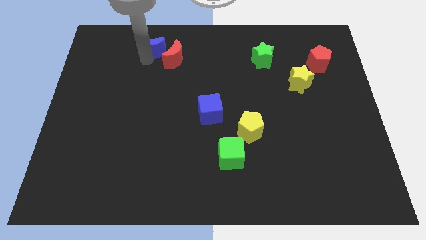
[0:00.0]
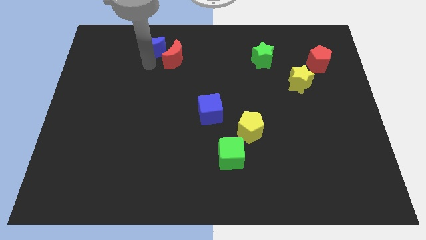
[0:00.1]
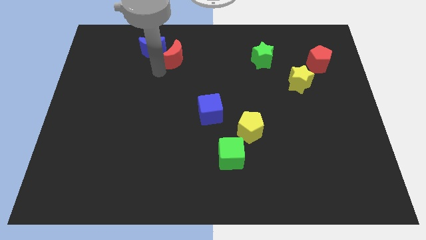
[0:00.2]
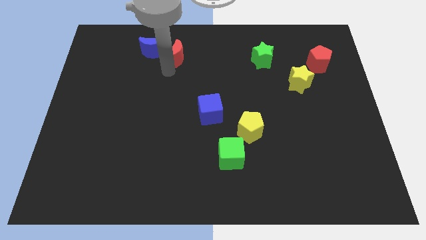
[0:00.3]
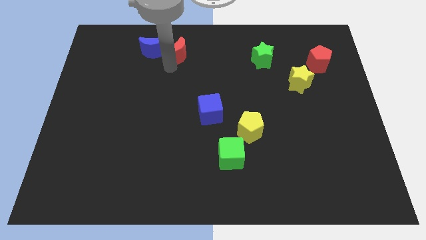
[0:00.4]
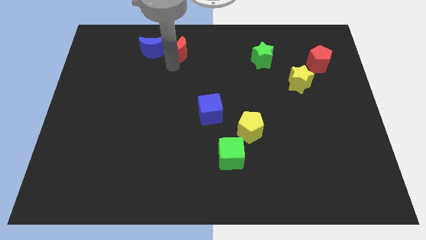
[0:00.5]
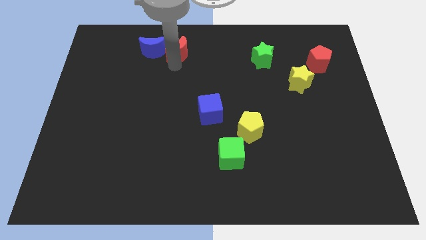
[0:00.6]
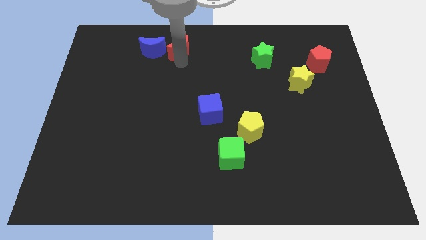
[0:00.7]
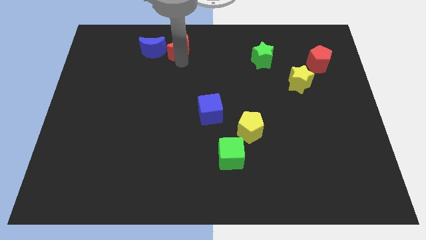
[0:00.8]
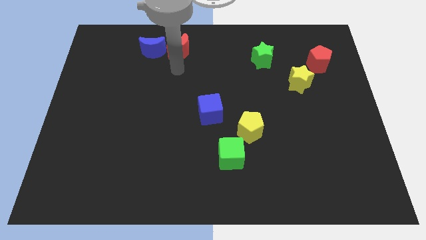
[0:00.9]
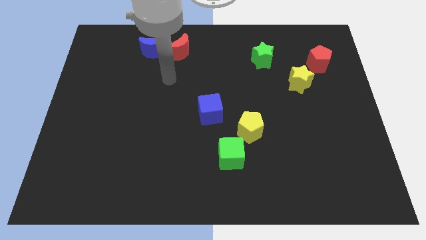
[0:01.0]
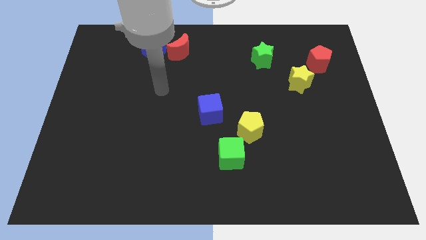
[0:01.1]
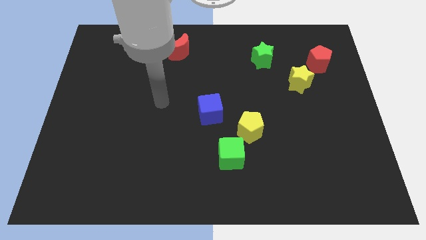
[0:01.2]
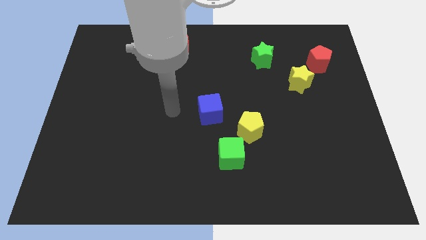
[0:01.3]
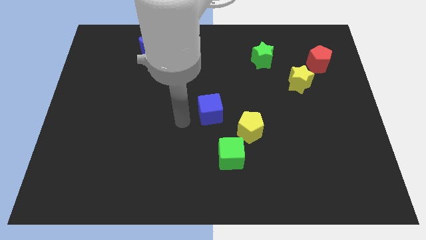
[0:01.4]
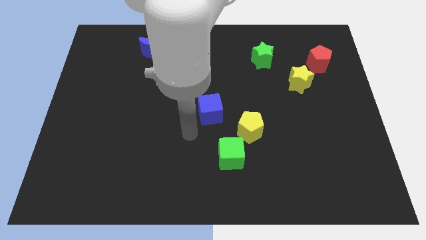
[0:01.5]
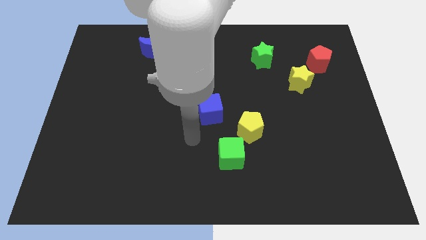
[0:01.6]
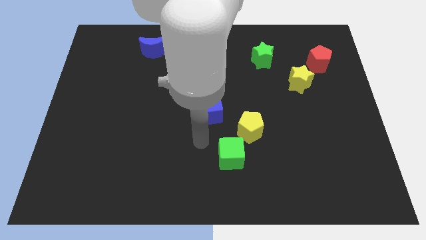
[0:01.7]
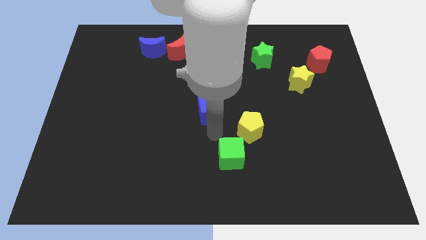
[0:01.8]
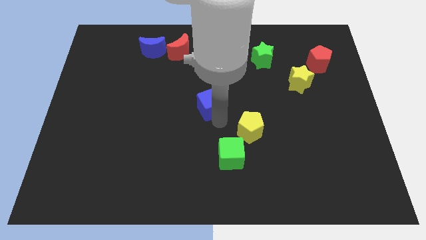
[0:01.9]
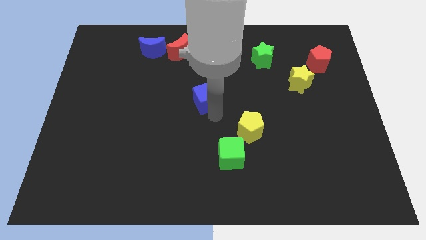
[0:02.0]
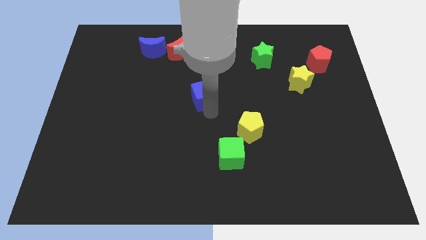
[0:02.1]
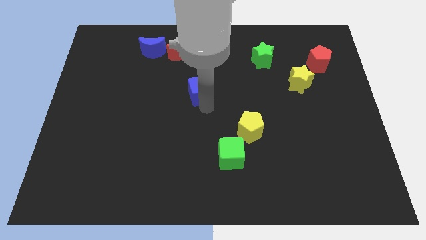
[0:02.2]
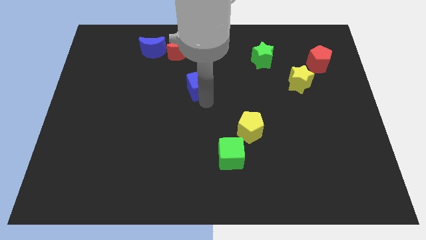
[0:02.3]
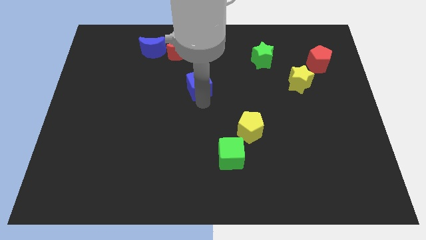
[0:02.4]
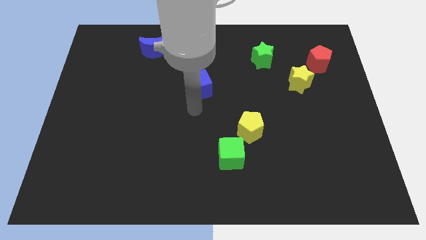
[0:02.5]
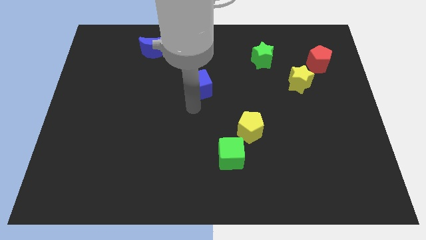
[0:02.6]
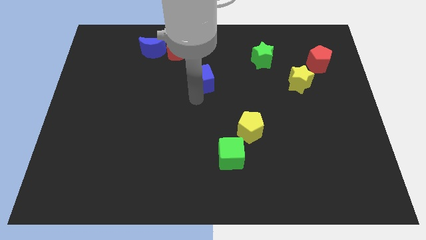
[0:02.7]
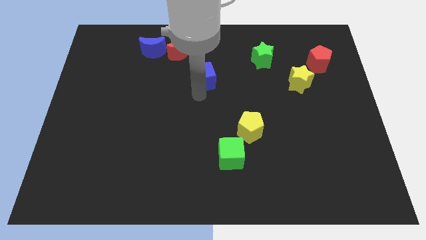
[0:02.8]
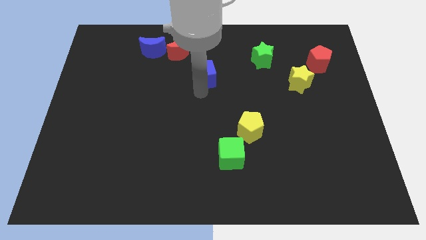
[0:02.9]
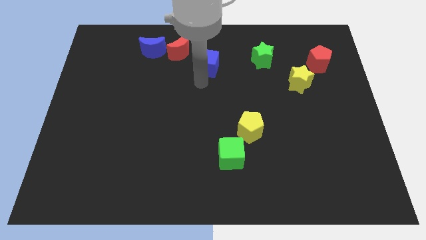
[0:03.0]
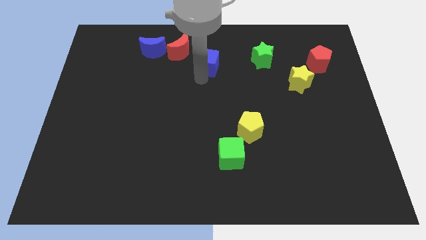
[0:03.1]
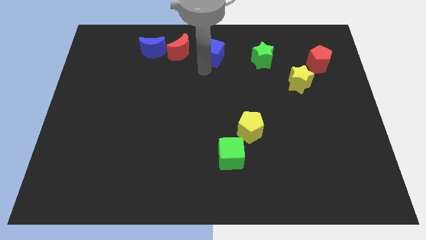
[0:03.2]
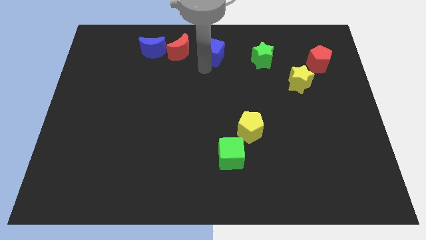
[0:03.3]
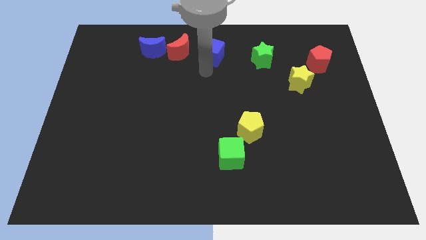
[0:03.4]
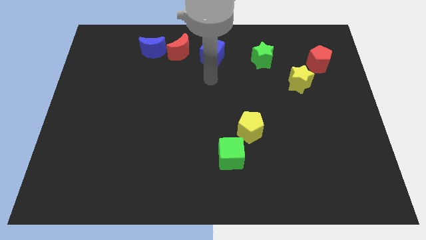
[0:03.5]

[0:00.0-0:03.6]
move blue cube to the top center

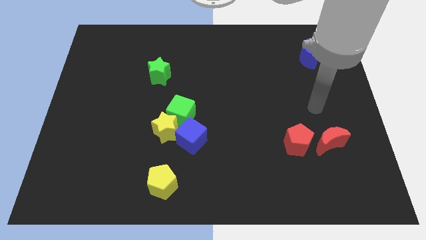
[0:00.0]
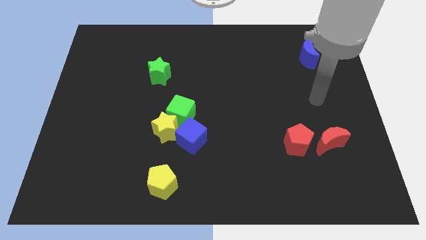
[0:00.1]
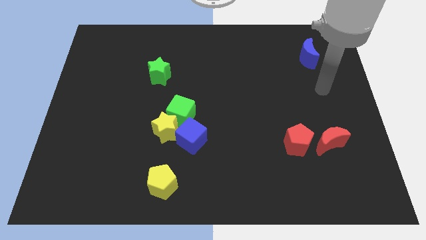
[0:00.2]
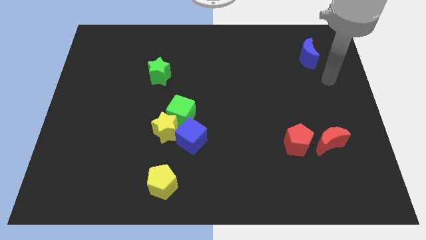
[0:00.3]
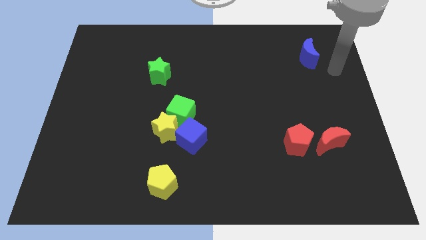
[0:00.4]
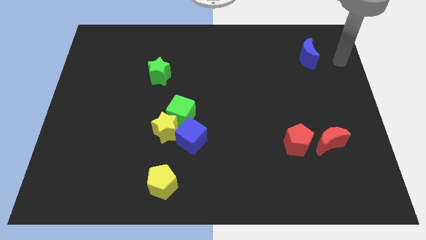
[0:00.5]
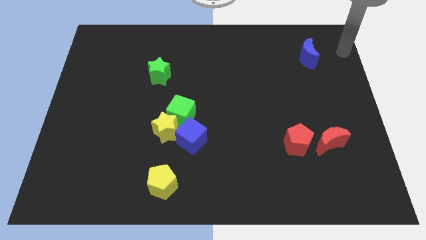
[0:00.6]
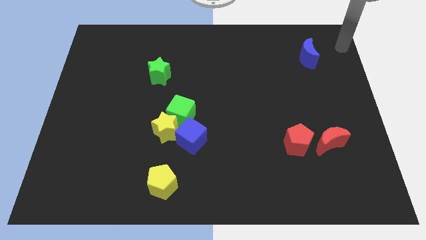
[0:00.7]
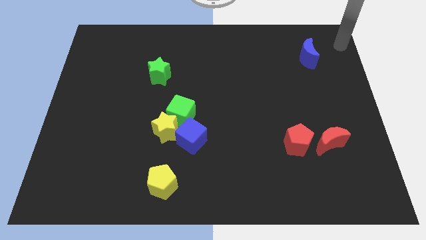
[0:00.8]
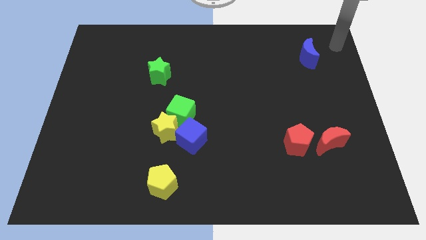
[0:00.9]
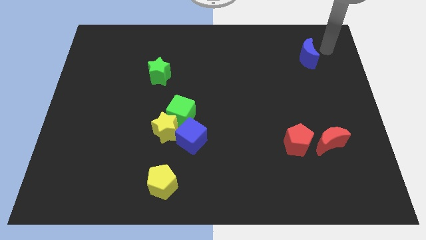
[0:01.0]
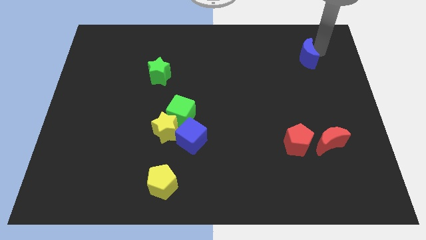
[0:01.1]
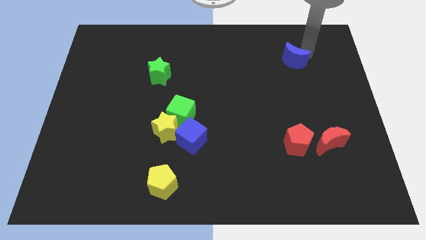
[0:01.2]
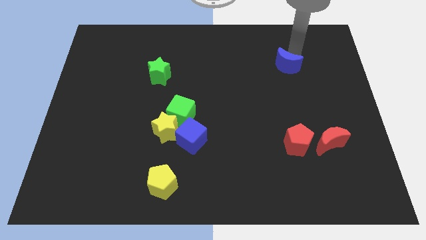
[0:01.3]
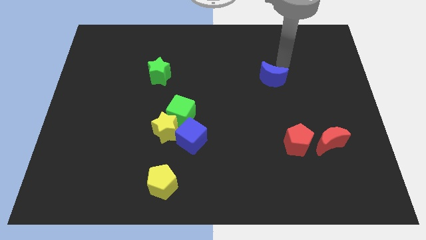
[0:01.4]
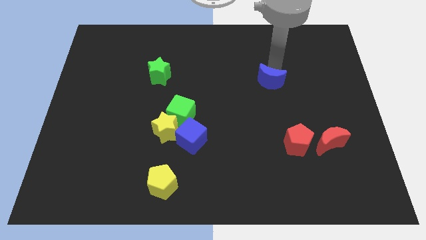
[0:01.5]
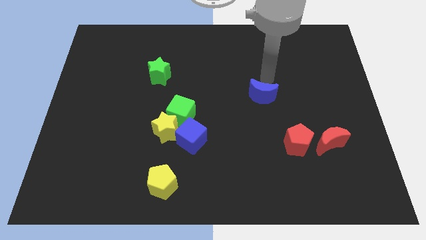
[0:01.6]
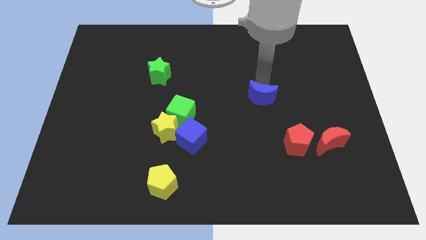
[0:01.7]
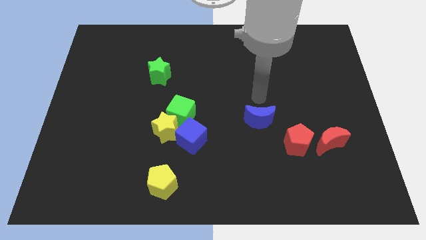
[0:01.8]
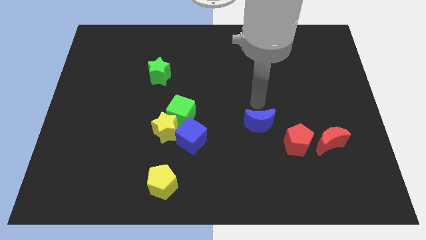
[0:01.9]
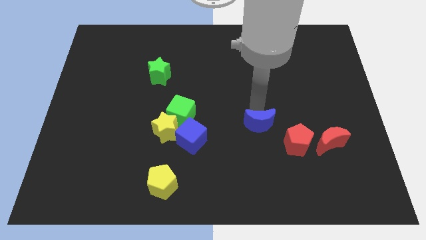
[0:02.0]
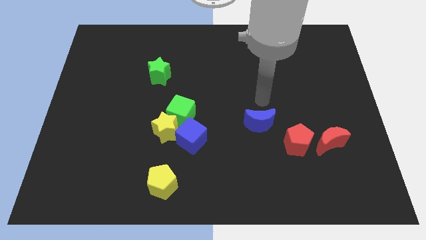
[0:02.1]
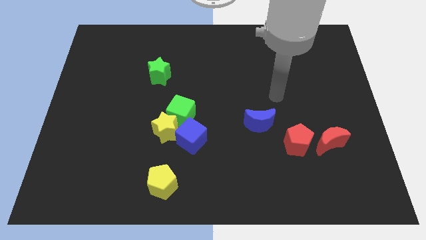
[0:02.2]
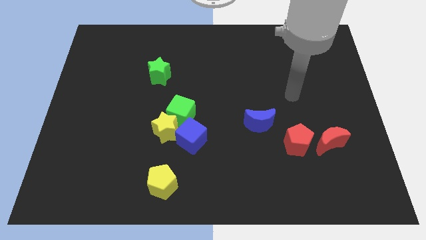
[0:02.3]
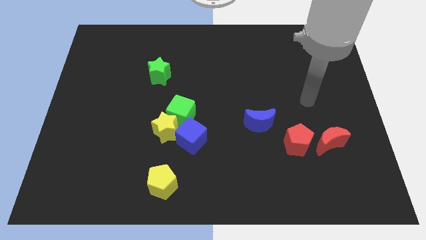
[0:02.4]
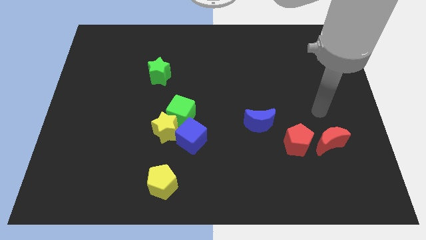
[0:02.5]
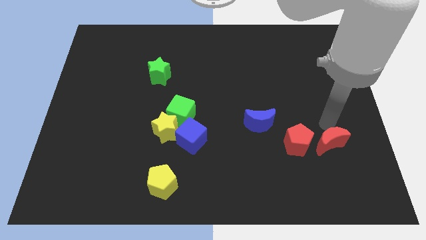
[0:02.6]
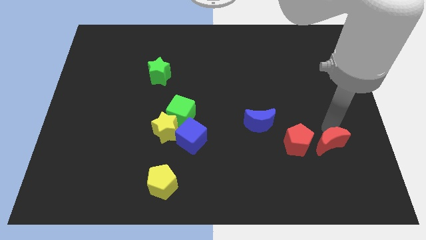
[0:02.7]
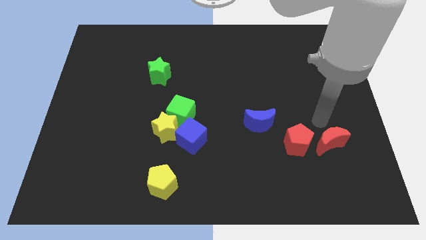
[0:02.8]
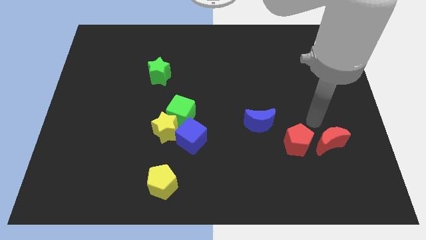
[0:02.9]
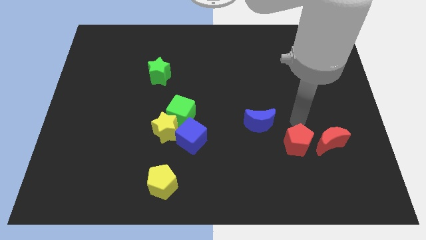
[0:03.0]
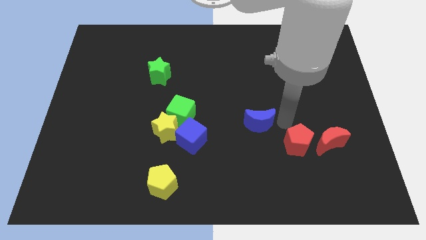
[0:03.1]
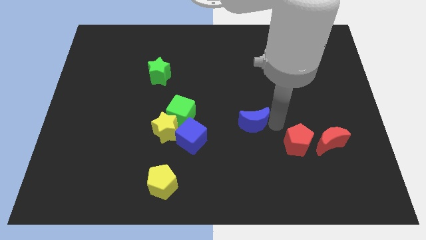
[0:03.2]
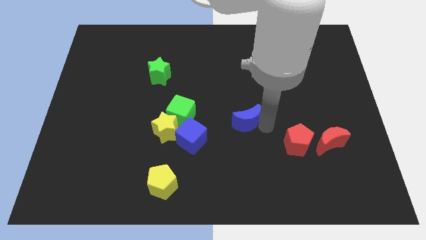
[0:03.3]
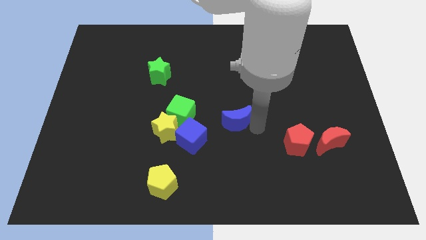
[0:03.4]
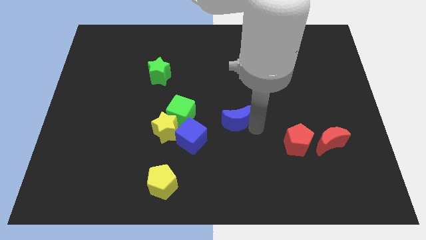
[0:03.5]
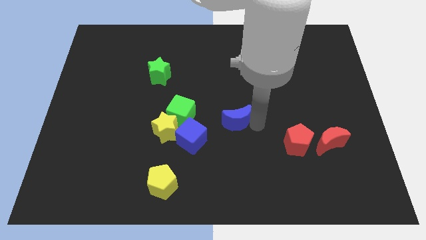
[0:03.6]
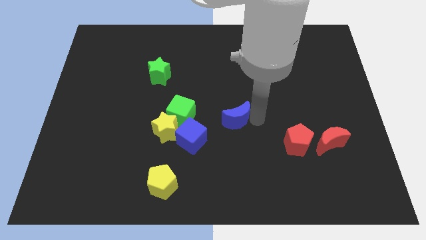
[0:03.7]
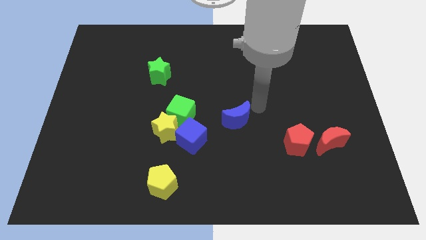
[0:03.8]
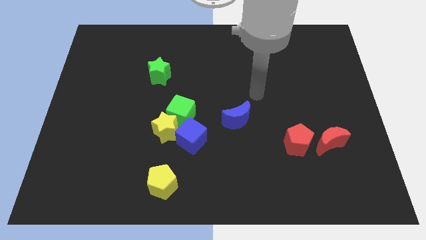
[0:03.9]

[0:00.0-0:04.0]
place the blue crescent near the blue cube

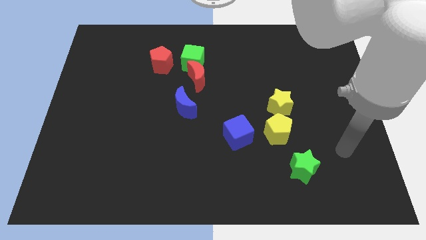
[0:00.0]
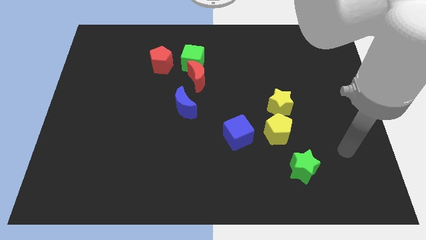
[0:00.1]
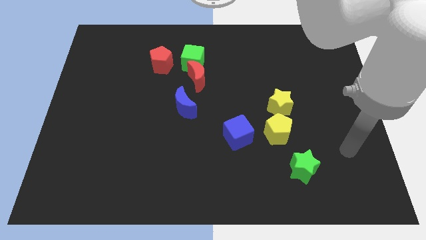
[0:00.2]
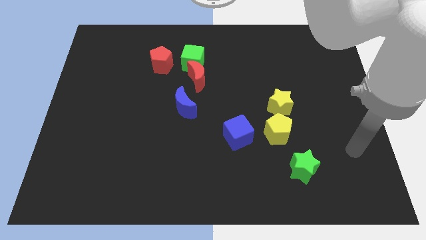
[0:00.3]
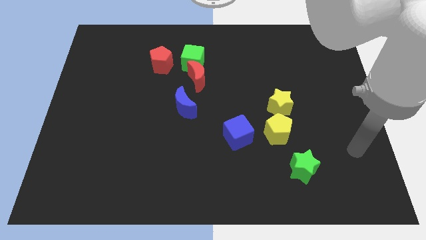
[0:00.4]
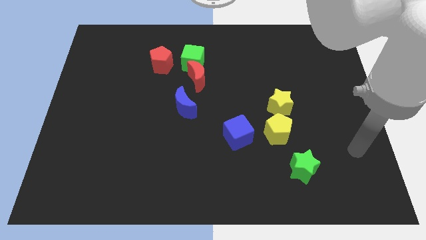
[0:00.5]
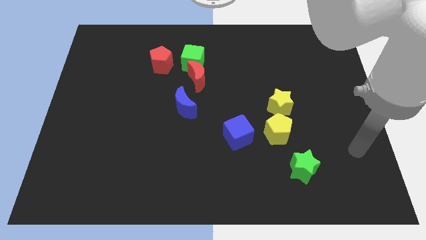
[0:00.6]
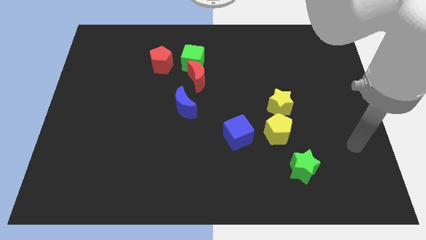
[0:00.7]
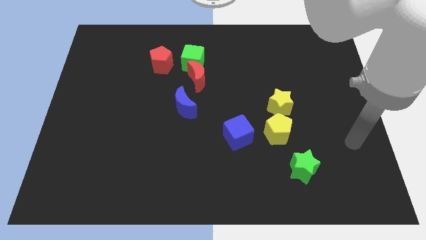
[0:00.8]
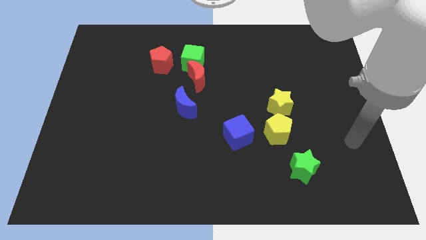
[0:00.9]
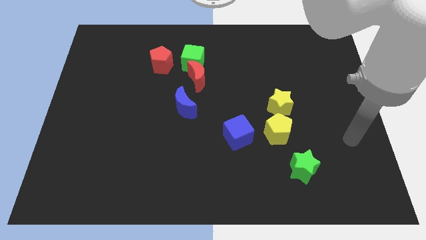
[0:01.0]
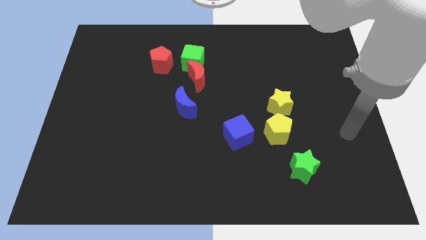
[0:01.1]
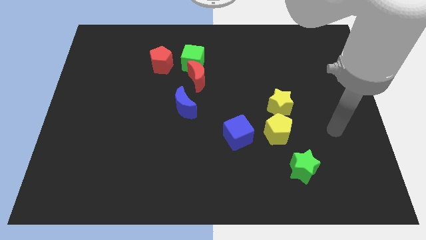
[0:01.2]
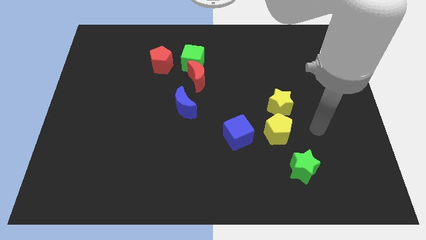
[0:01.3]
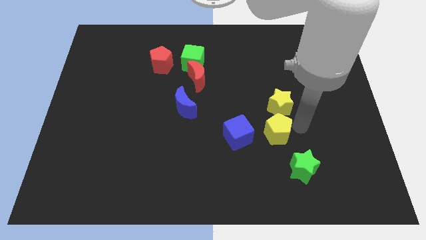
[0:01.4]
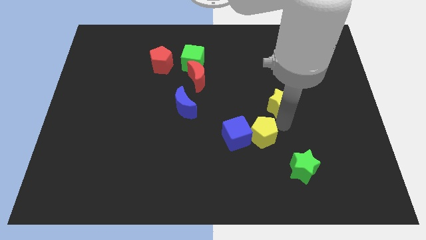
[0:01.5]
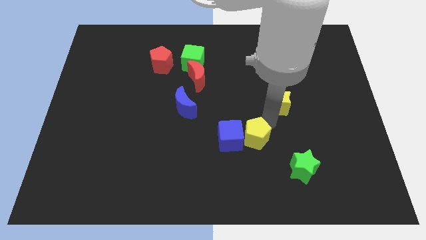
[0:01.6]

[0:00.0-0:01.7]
move the yellow pentagon into the blue cube
